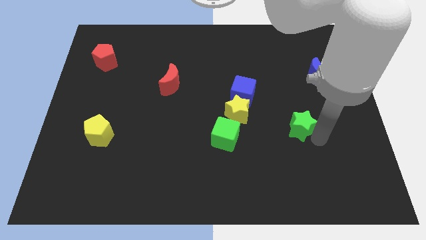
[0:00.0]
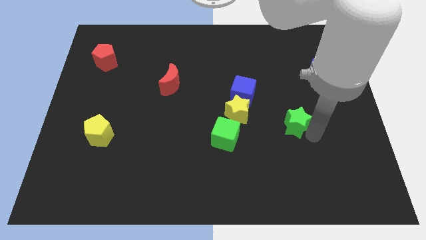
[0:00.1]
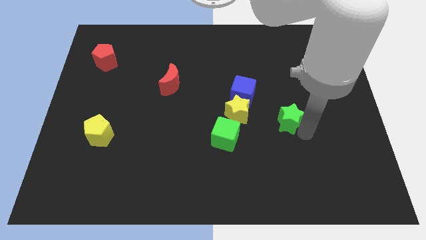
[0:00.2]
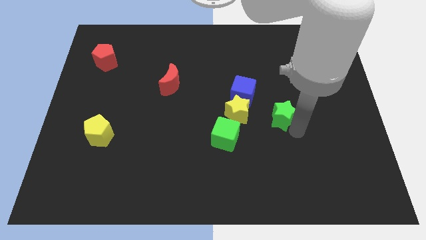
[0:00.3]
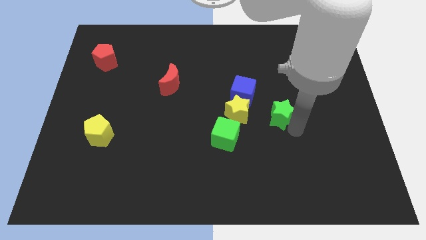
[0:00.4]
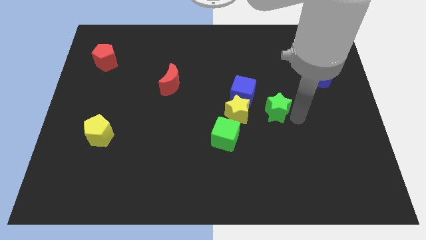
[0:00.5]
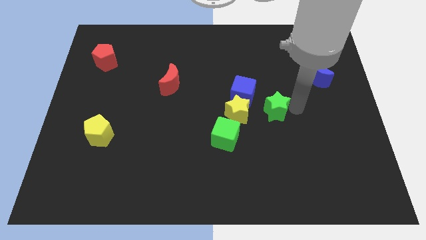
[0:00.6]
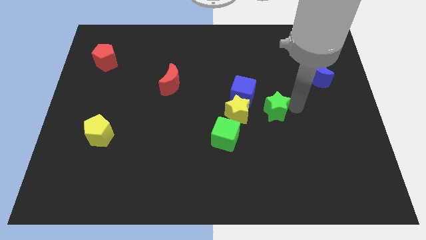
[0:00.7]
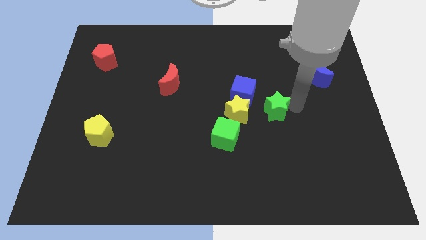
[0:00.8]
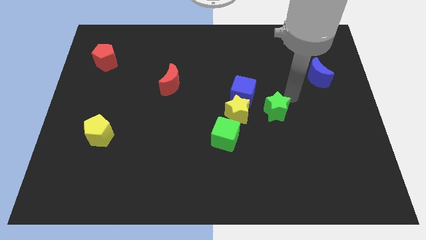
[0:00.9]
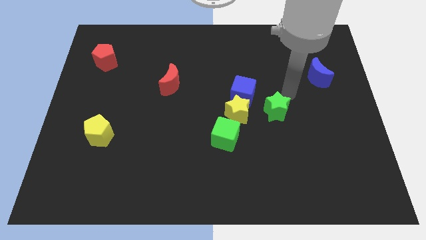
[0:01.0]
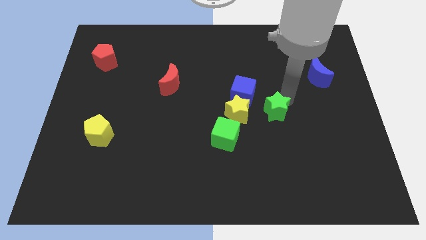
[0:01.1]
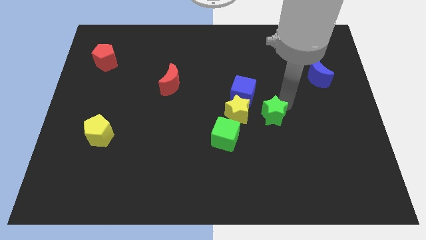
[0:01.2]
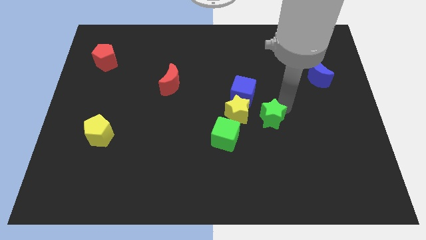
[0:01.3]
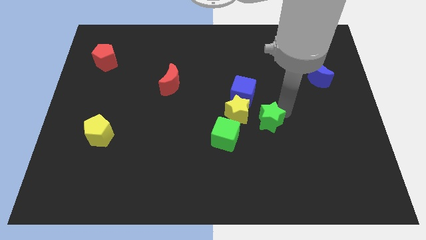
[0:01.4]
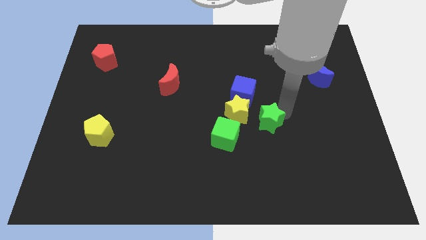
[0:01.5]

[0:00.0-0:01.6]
drag the green star towards the yellow star

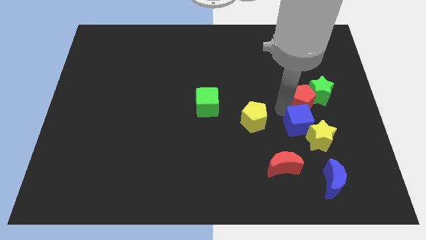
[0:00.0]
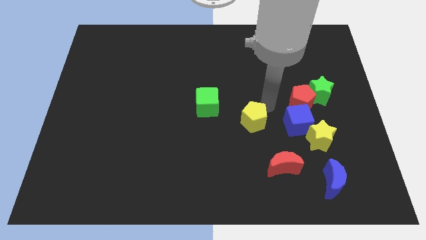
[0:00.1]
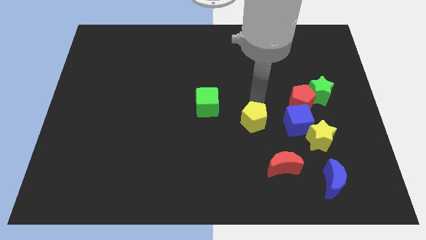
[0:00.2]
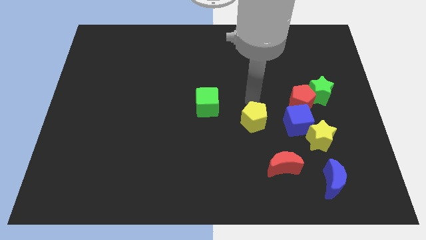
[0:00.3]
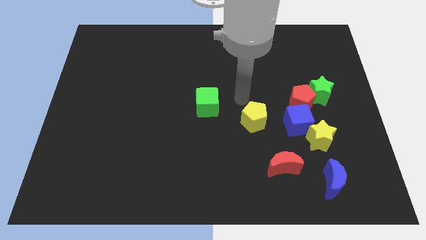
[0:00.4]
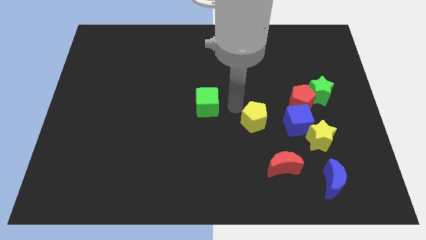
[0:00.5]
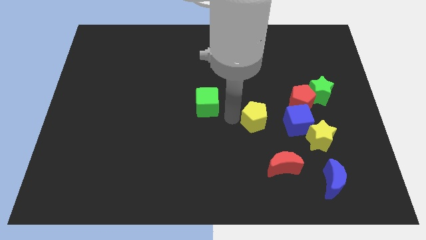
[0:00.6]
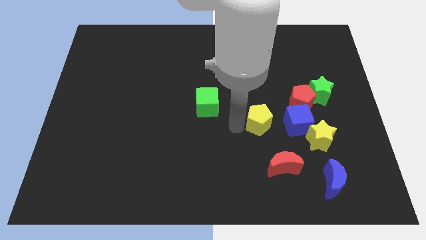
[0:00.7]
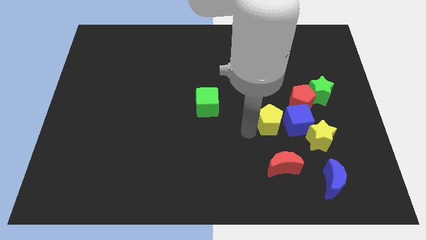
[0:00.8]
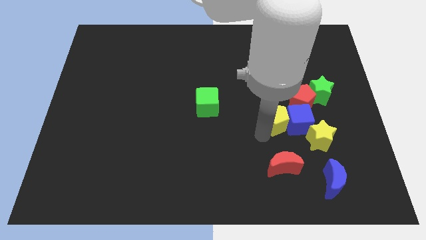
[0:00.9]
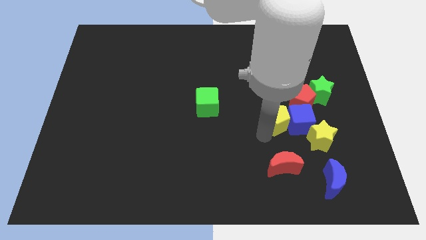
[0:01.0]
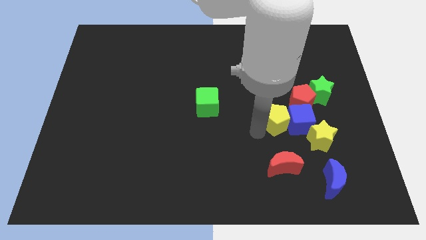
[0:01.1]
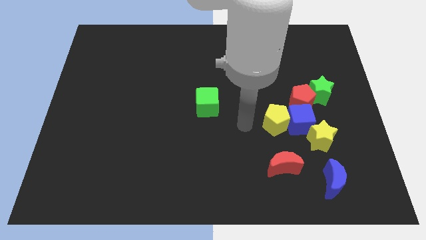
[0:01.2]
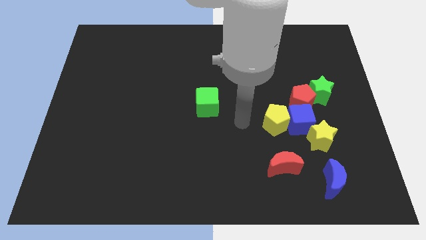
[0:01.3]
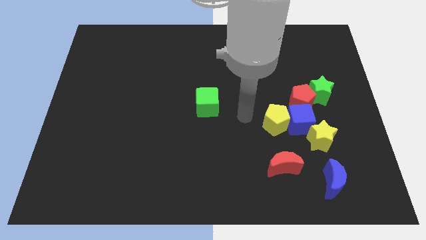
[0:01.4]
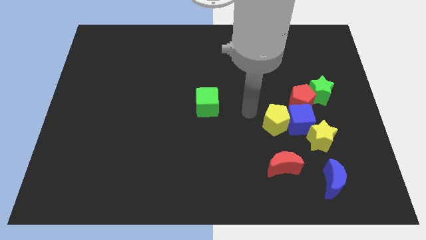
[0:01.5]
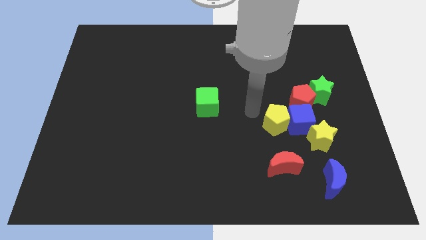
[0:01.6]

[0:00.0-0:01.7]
move yellow pentagon into the blue cube

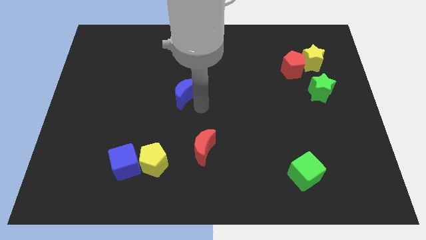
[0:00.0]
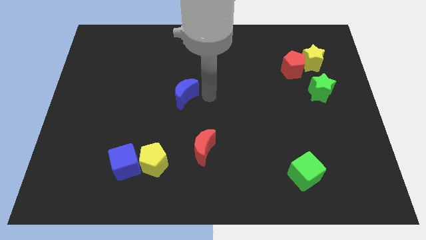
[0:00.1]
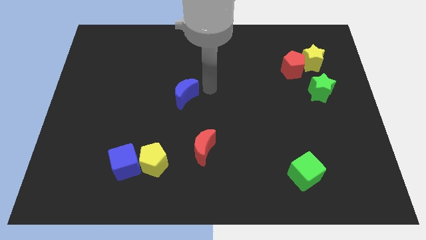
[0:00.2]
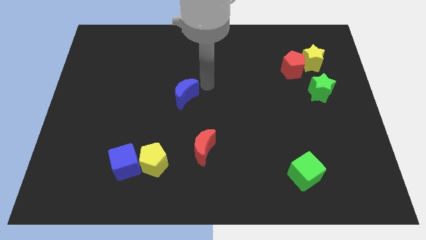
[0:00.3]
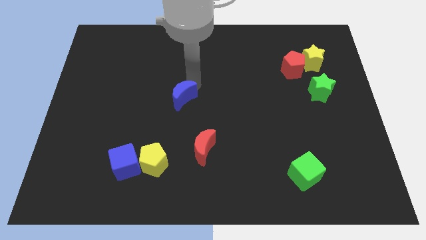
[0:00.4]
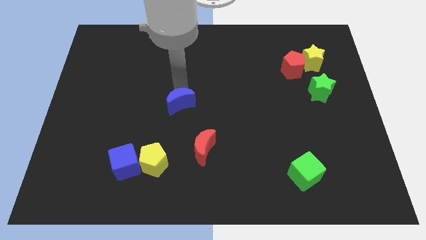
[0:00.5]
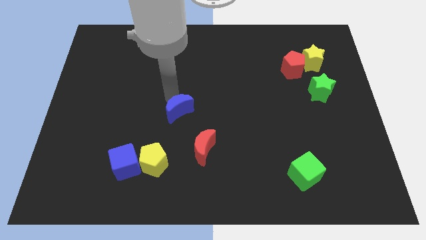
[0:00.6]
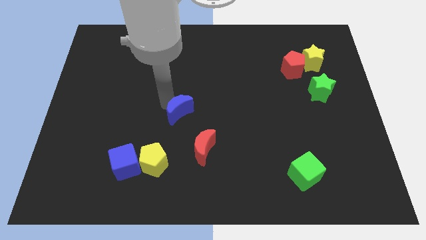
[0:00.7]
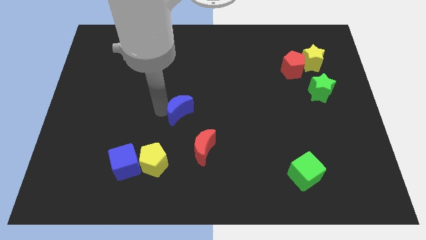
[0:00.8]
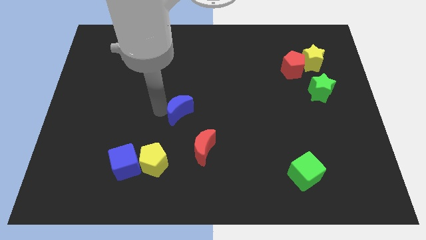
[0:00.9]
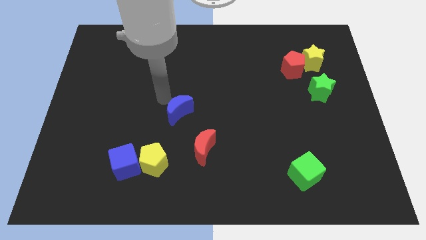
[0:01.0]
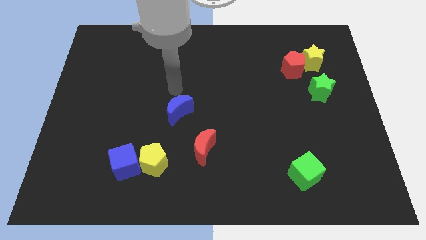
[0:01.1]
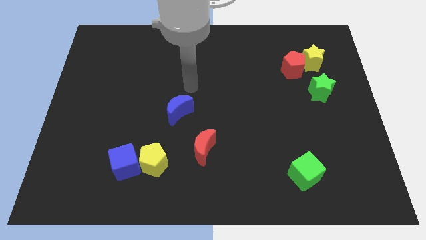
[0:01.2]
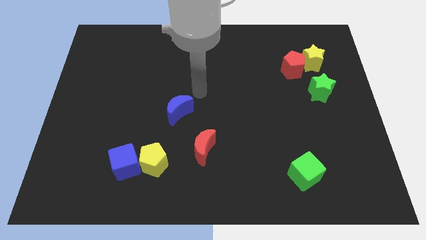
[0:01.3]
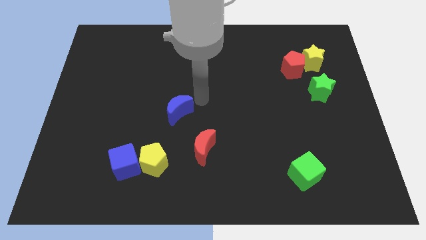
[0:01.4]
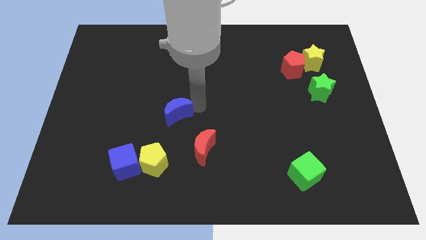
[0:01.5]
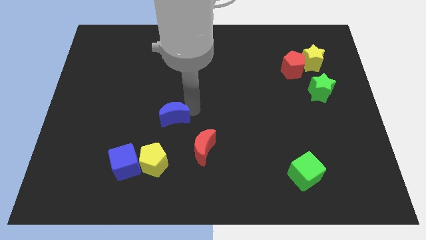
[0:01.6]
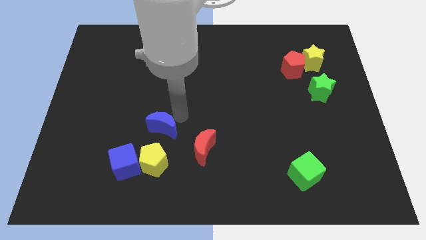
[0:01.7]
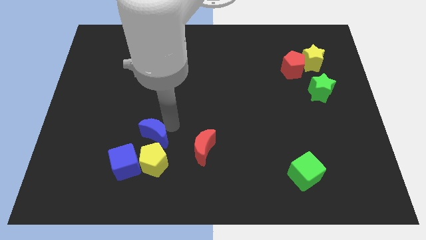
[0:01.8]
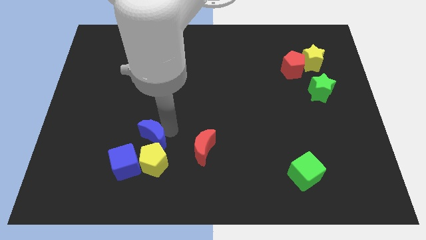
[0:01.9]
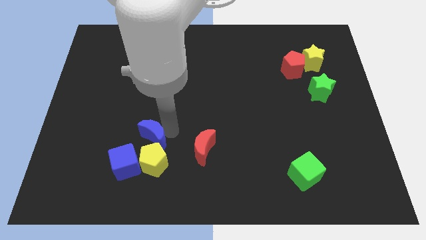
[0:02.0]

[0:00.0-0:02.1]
place blue moon on top of yellow pentagon

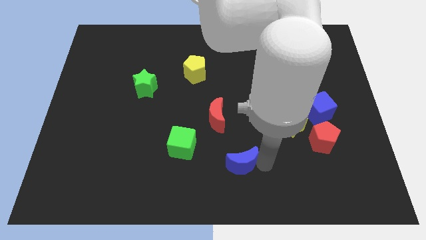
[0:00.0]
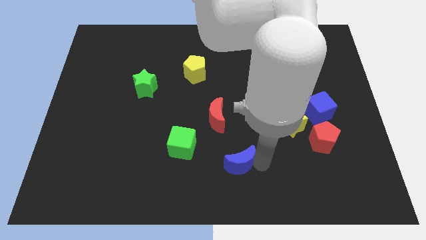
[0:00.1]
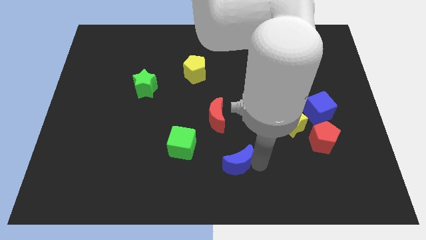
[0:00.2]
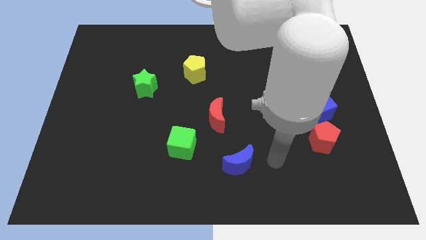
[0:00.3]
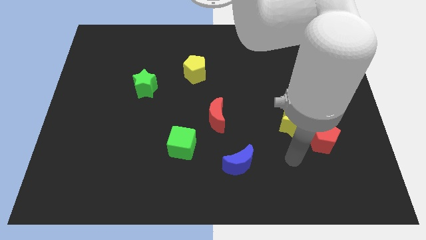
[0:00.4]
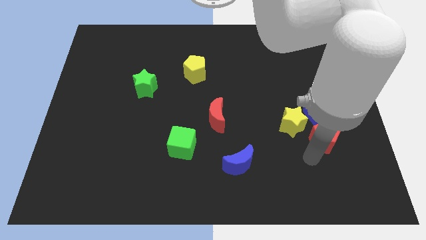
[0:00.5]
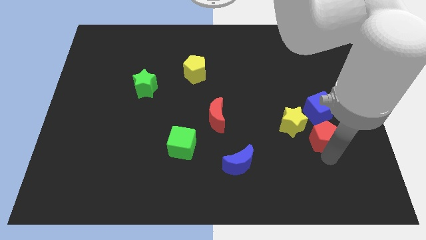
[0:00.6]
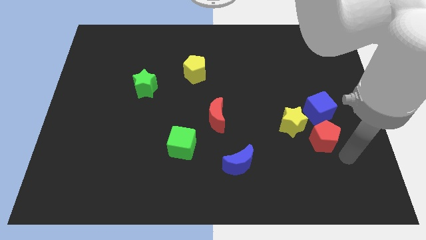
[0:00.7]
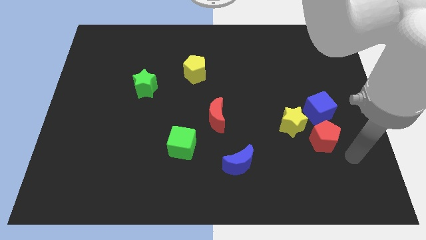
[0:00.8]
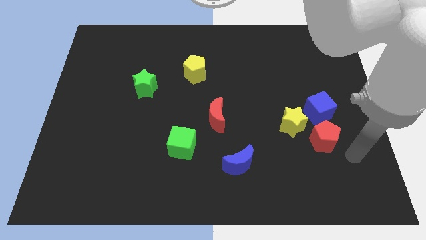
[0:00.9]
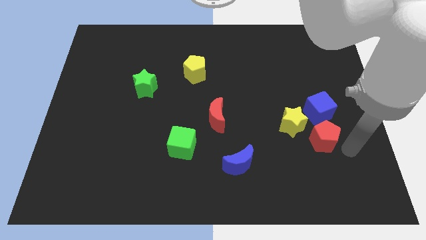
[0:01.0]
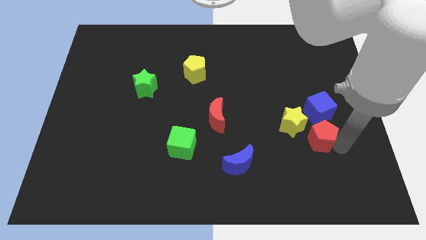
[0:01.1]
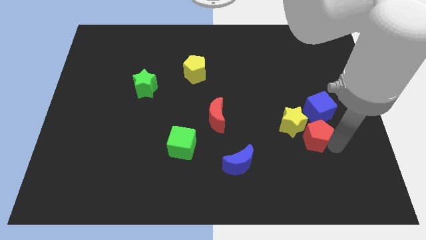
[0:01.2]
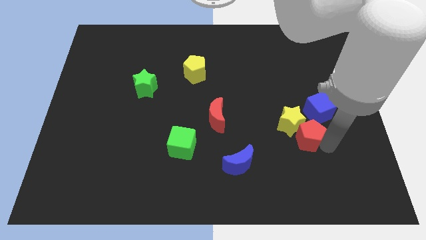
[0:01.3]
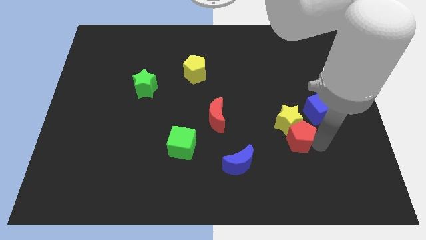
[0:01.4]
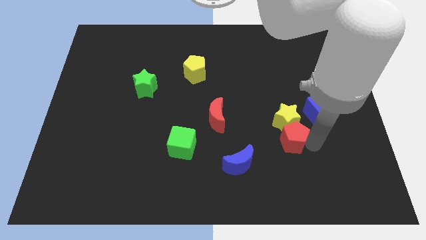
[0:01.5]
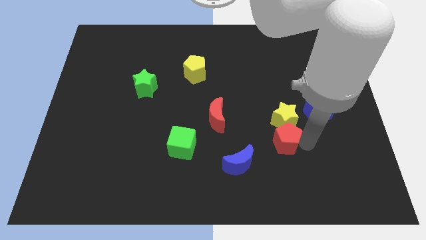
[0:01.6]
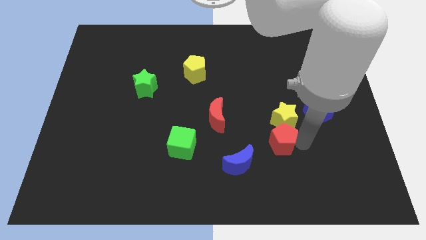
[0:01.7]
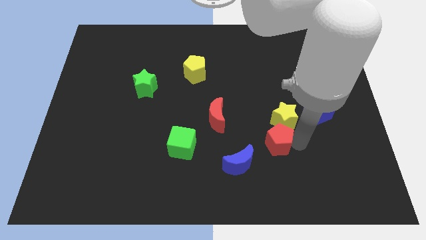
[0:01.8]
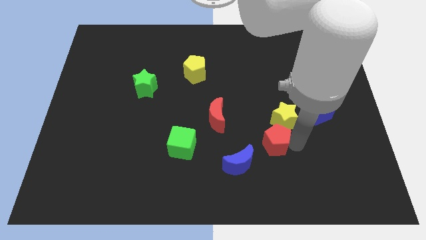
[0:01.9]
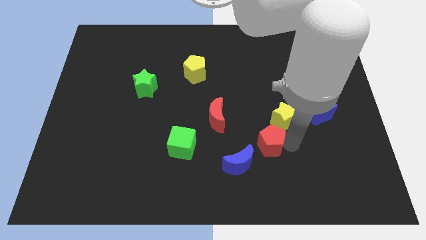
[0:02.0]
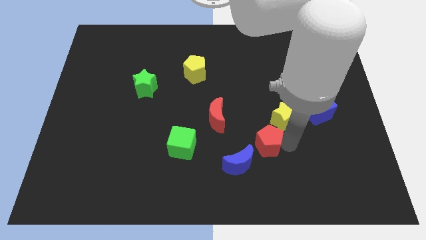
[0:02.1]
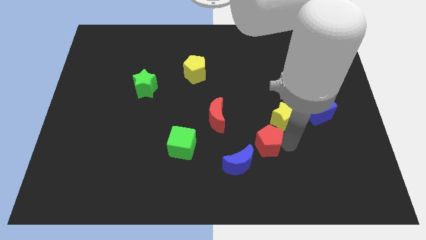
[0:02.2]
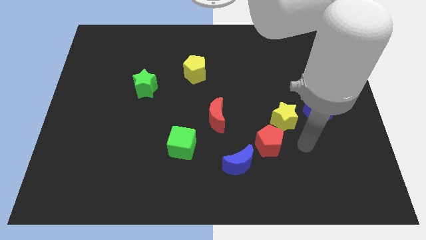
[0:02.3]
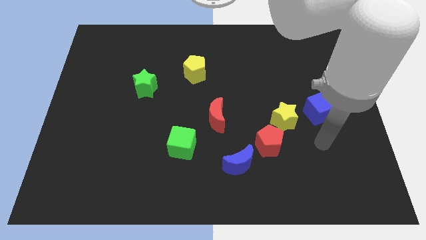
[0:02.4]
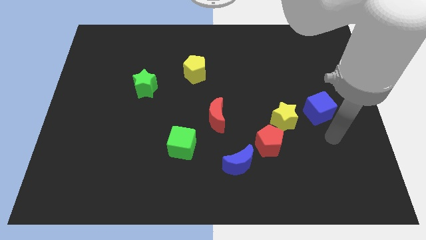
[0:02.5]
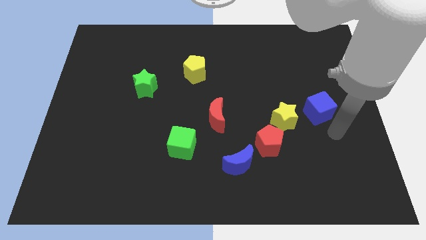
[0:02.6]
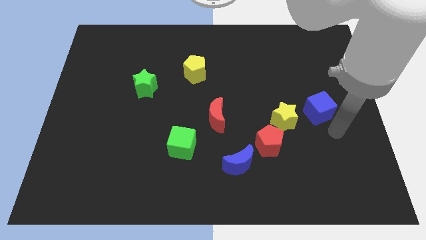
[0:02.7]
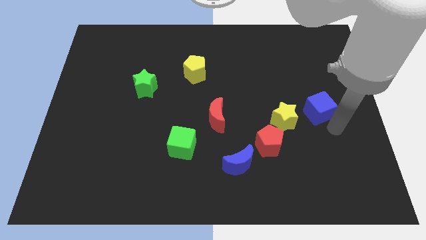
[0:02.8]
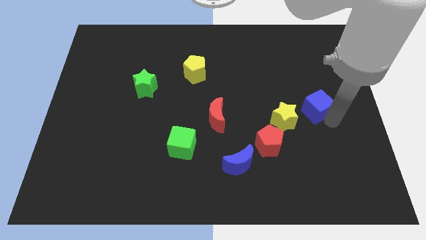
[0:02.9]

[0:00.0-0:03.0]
move red pentagon to the top right of the blue moon

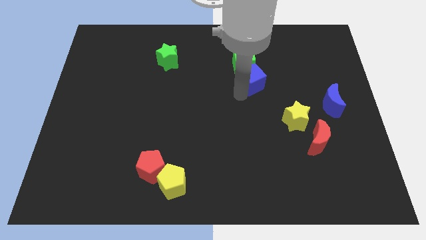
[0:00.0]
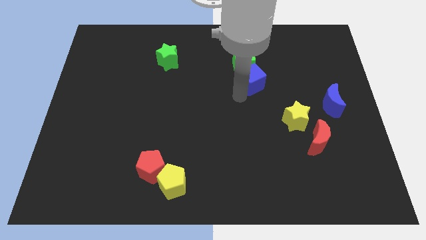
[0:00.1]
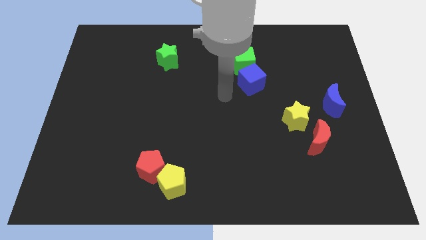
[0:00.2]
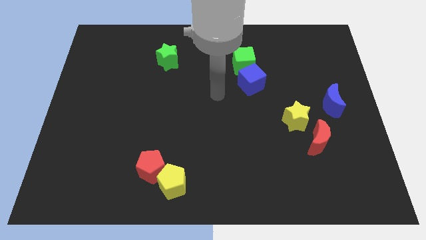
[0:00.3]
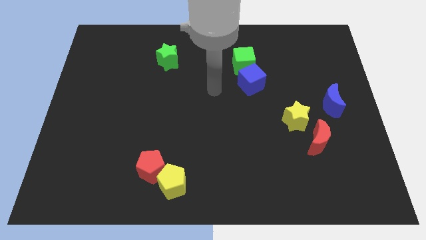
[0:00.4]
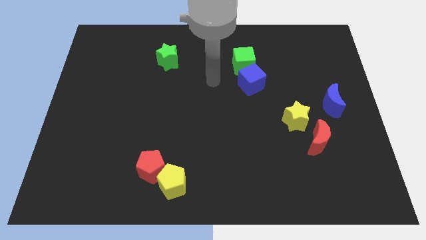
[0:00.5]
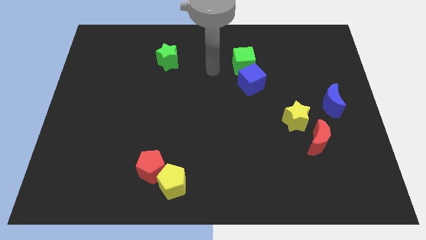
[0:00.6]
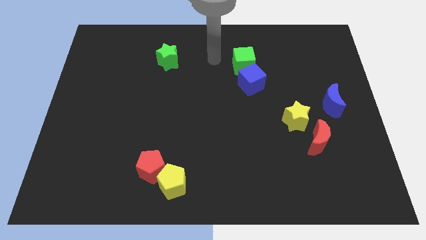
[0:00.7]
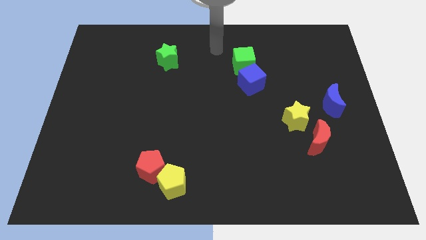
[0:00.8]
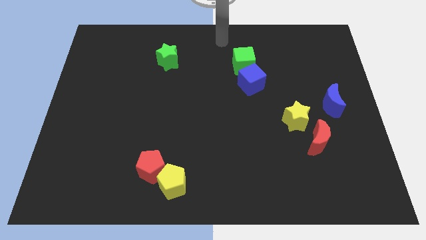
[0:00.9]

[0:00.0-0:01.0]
move your arm away from blue cube
